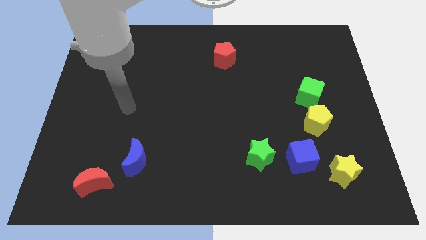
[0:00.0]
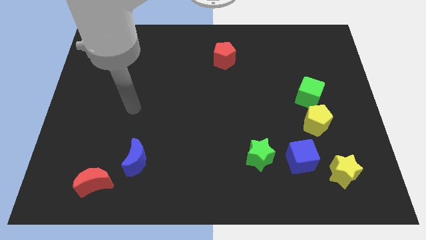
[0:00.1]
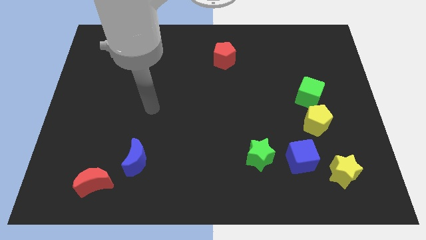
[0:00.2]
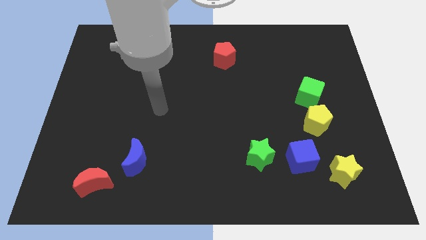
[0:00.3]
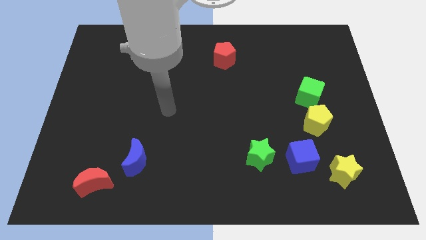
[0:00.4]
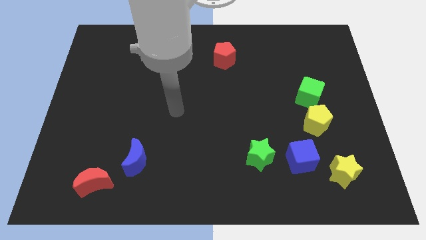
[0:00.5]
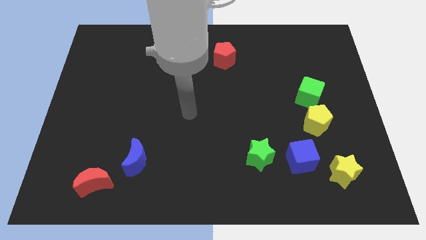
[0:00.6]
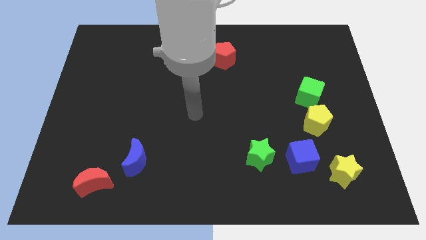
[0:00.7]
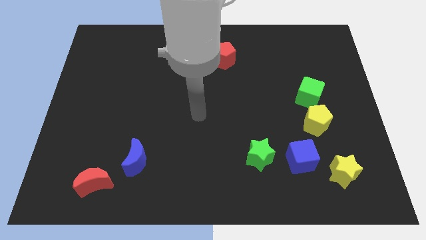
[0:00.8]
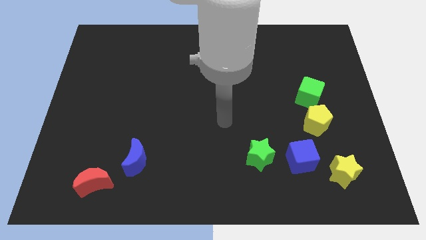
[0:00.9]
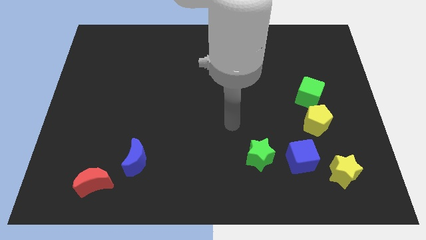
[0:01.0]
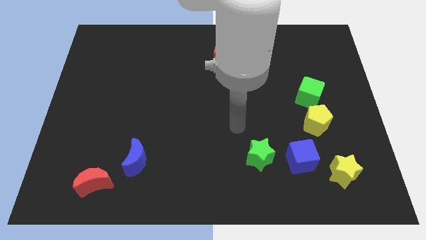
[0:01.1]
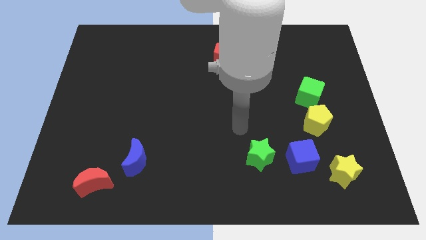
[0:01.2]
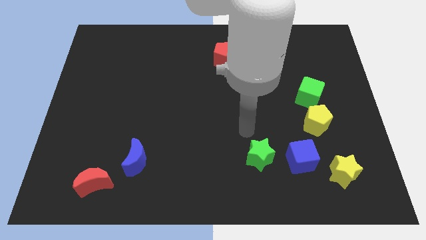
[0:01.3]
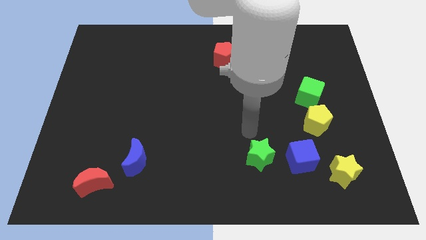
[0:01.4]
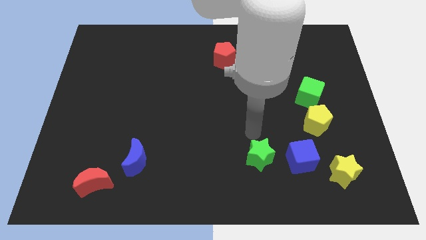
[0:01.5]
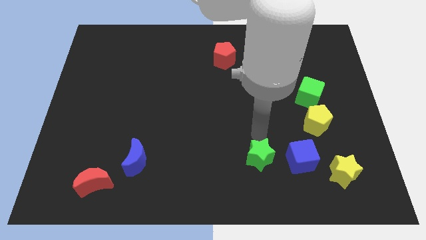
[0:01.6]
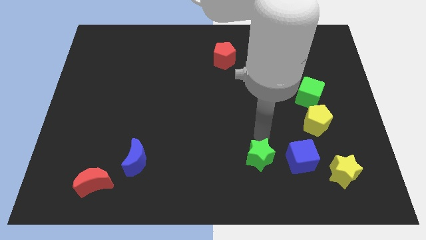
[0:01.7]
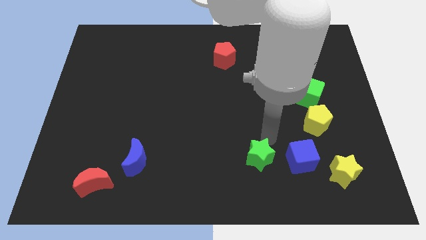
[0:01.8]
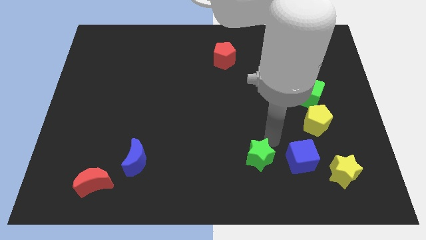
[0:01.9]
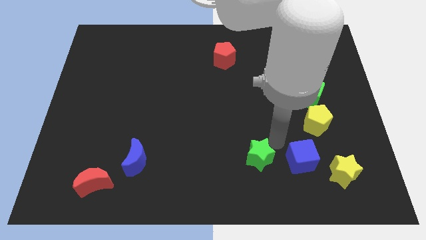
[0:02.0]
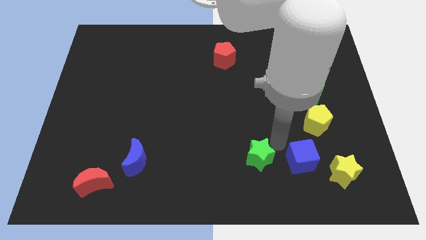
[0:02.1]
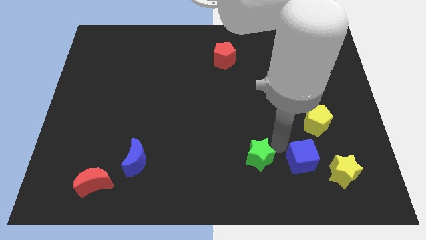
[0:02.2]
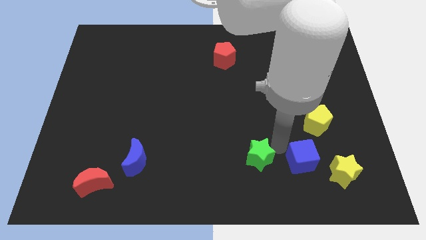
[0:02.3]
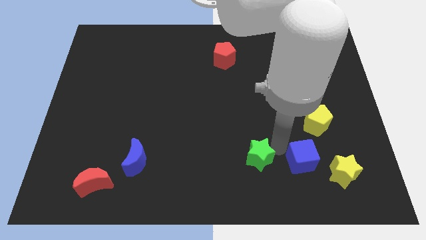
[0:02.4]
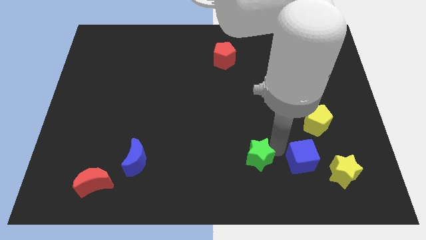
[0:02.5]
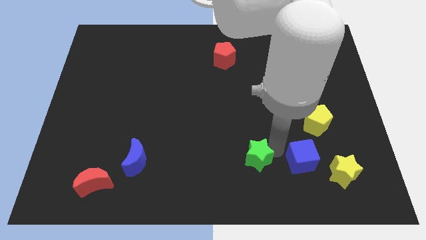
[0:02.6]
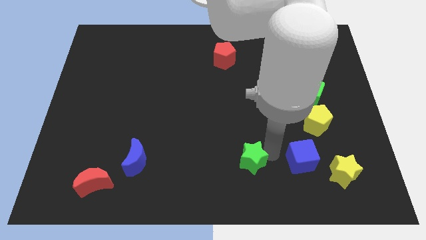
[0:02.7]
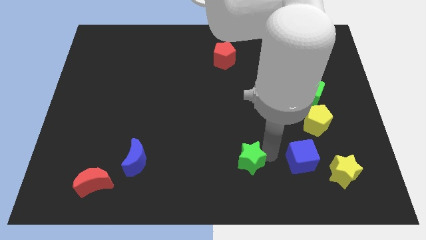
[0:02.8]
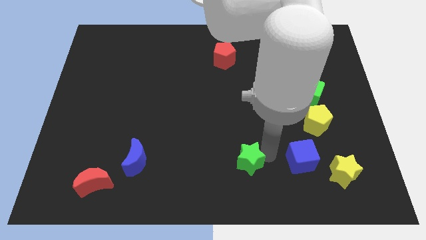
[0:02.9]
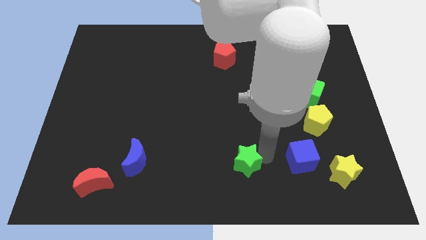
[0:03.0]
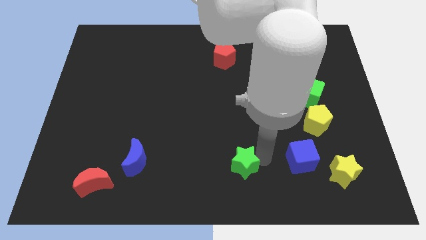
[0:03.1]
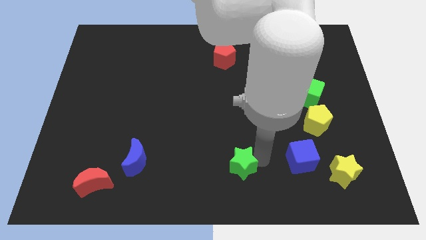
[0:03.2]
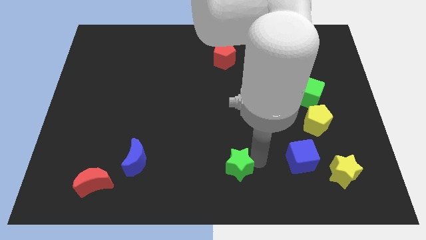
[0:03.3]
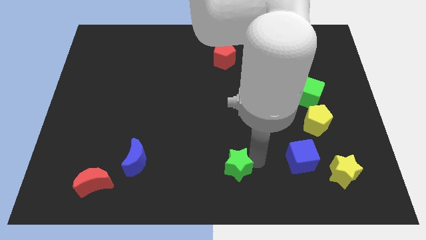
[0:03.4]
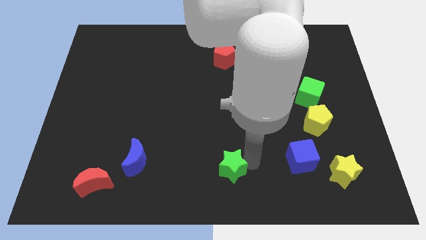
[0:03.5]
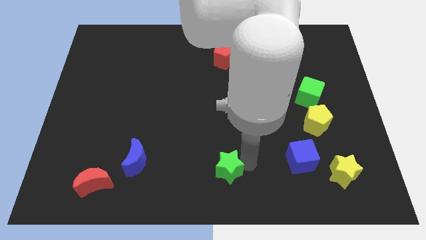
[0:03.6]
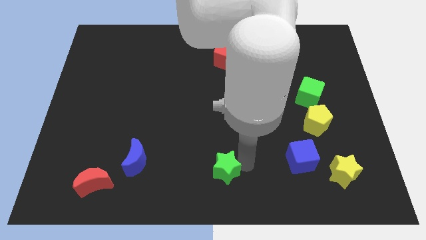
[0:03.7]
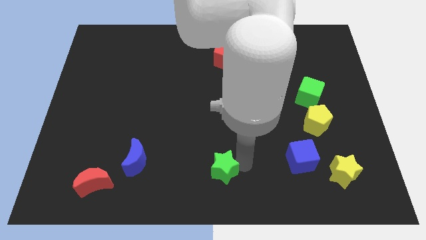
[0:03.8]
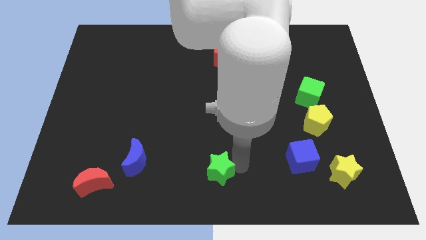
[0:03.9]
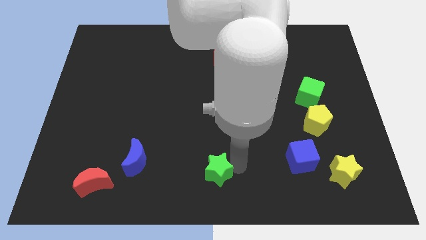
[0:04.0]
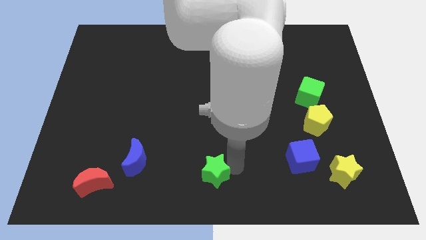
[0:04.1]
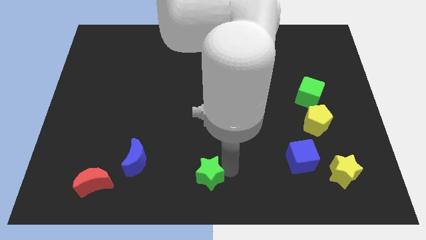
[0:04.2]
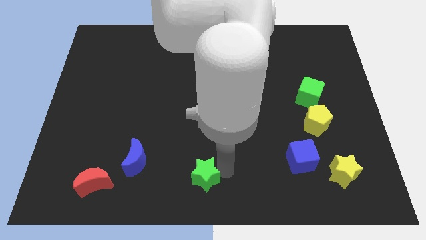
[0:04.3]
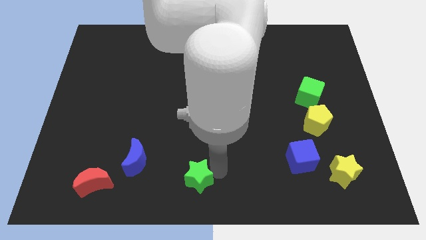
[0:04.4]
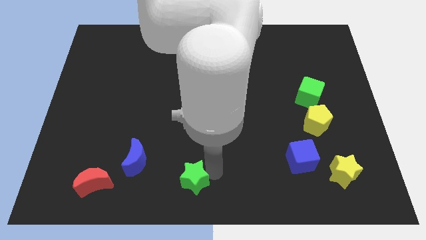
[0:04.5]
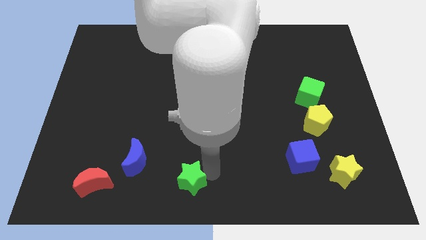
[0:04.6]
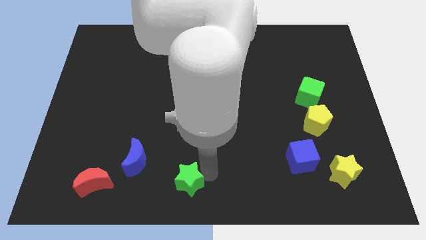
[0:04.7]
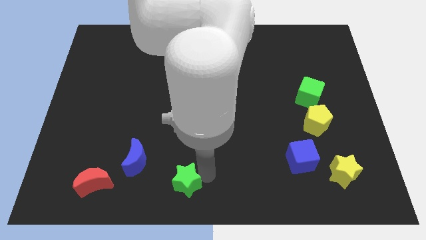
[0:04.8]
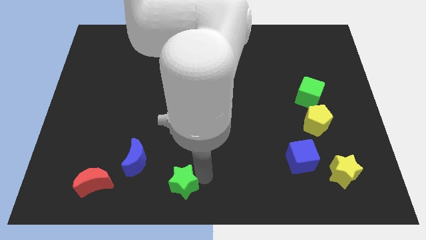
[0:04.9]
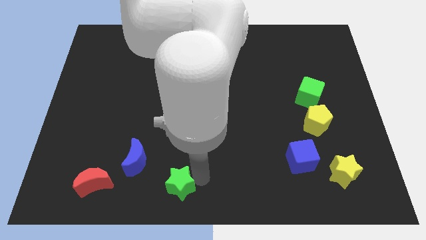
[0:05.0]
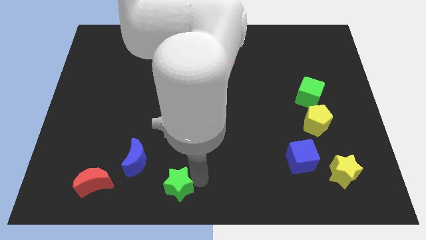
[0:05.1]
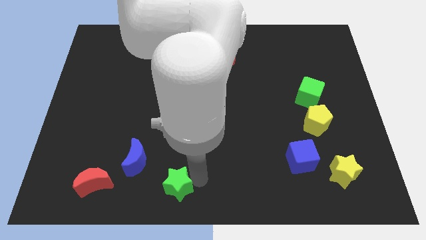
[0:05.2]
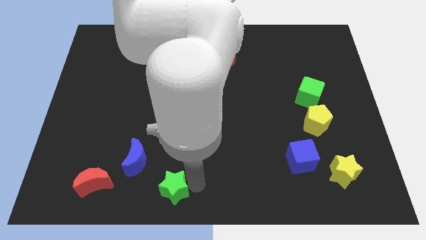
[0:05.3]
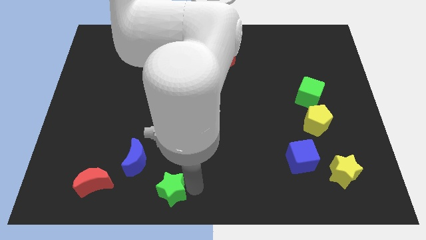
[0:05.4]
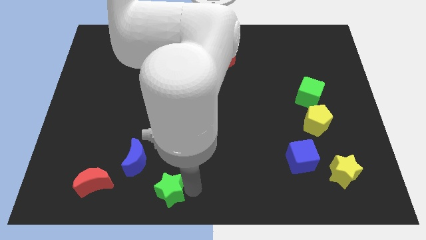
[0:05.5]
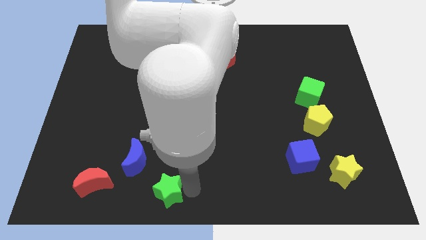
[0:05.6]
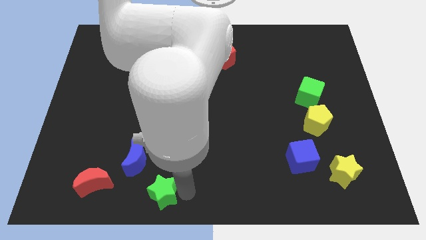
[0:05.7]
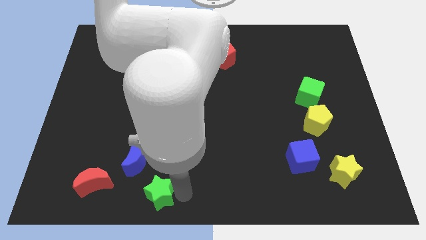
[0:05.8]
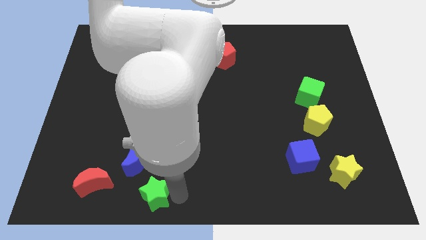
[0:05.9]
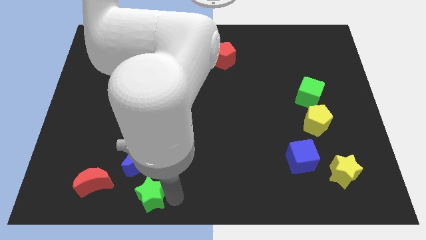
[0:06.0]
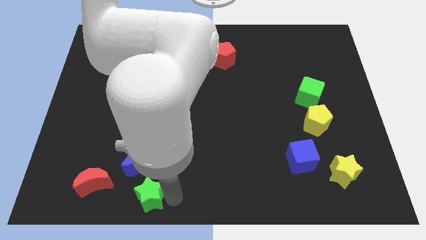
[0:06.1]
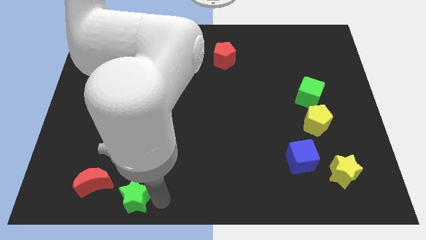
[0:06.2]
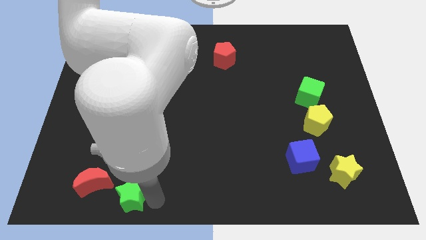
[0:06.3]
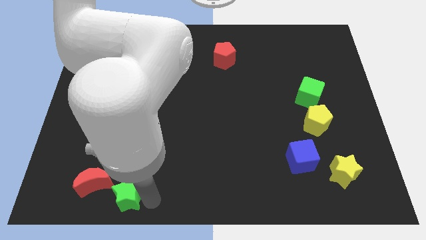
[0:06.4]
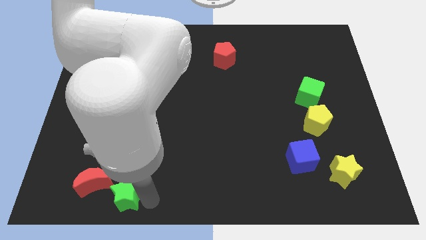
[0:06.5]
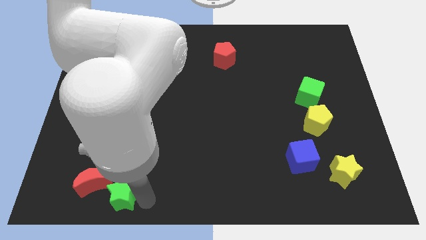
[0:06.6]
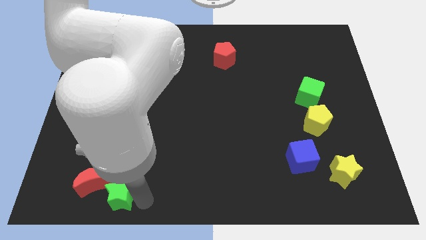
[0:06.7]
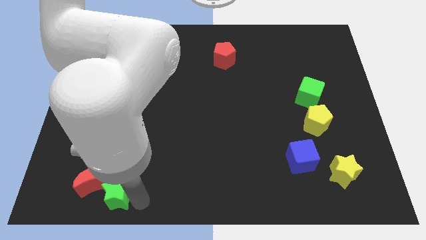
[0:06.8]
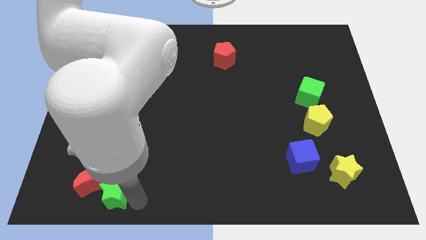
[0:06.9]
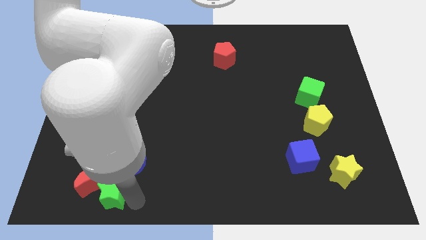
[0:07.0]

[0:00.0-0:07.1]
push the green star to the red moon

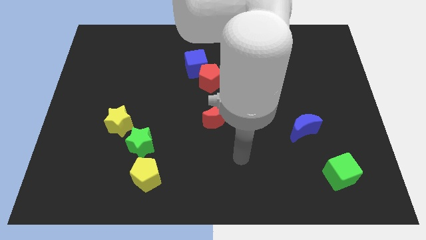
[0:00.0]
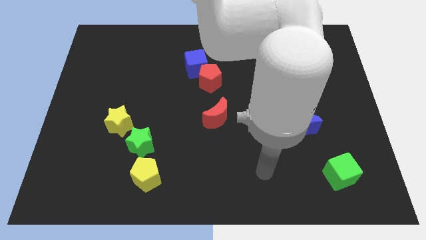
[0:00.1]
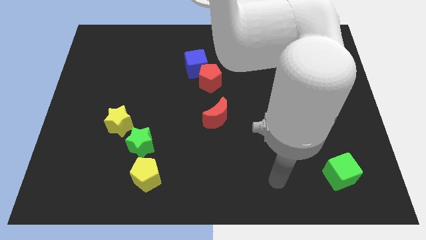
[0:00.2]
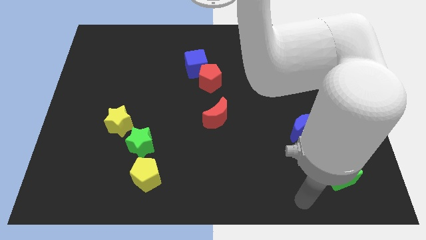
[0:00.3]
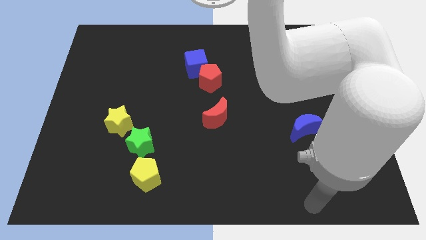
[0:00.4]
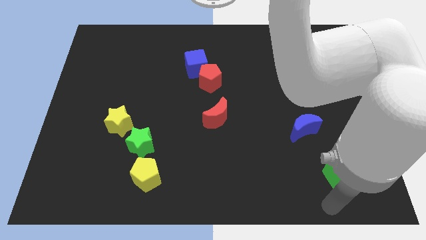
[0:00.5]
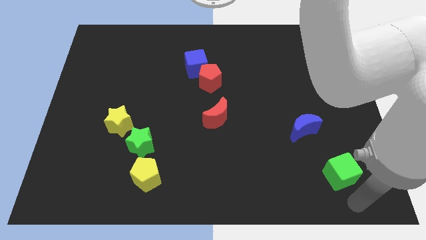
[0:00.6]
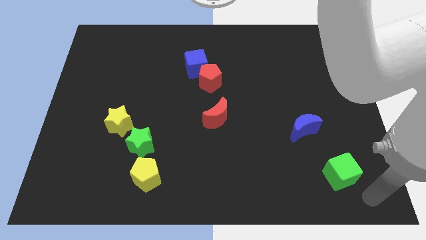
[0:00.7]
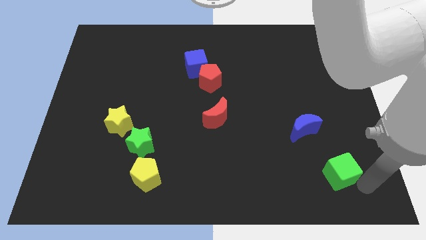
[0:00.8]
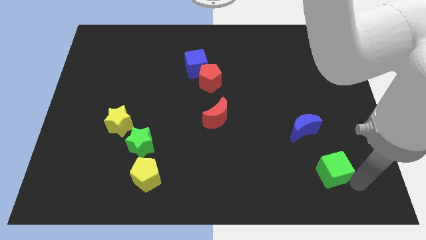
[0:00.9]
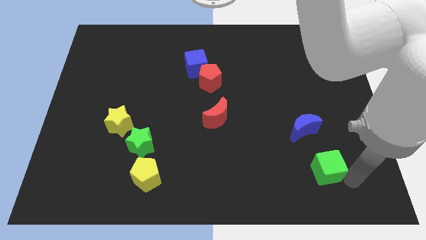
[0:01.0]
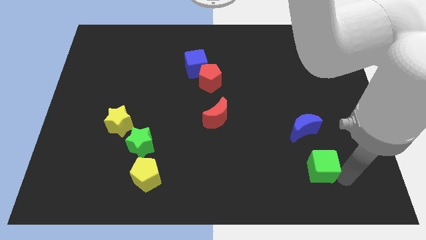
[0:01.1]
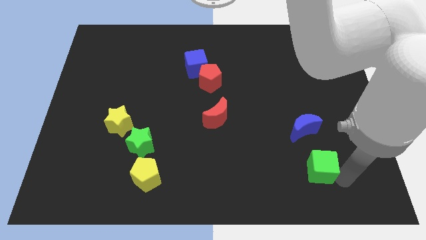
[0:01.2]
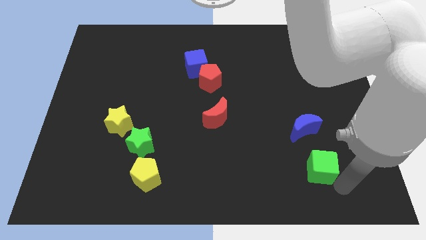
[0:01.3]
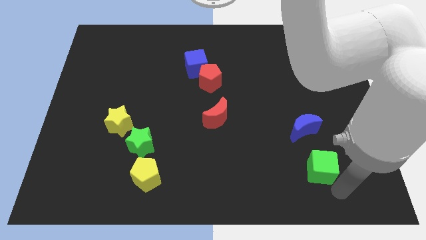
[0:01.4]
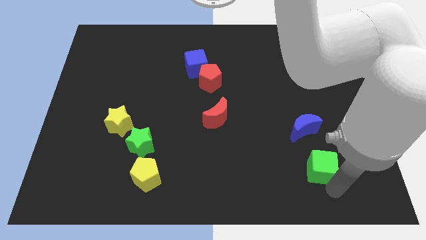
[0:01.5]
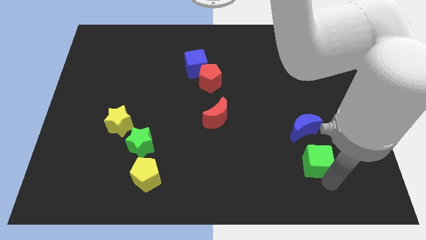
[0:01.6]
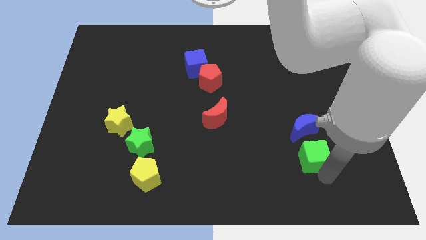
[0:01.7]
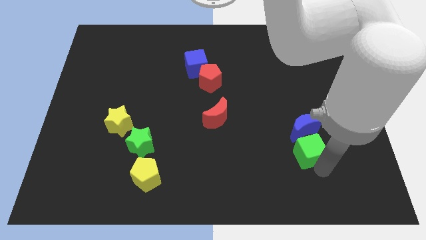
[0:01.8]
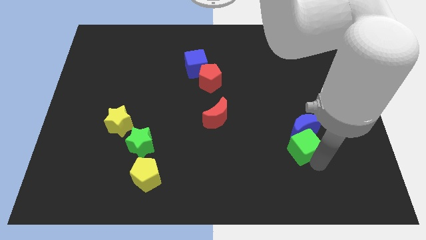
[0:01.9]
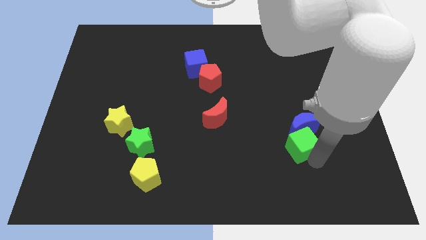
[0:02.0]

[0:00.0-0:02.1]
slide the green cube close to the blue moon
